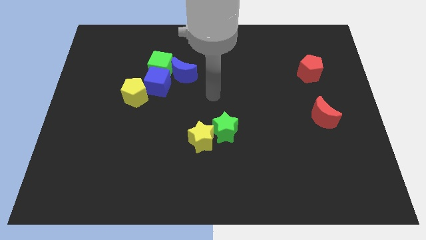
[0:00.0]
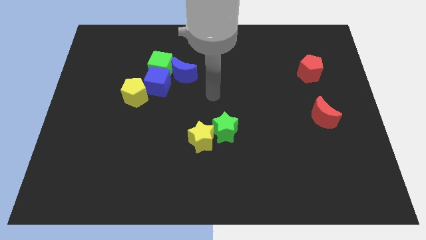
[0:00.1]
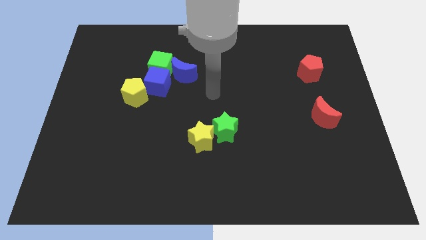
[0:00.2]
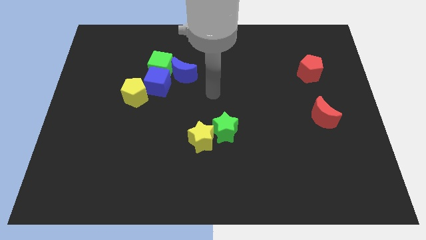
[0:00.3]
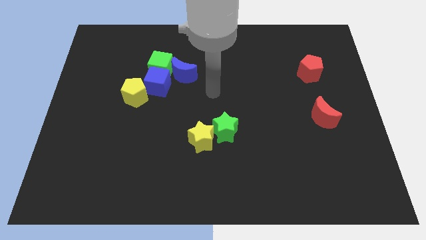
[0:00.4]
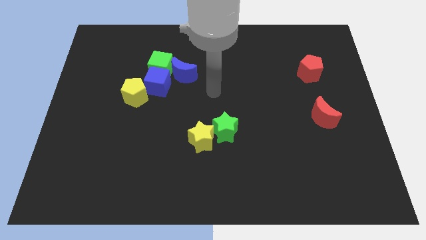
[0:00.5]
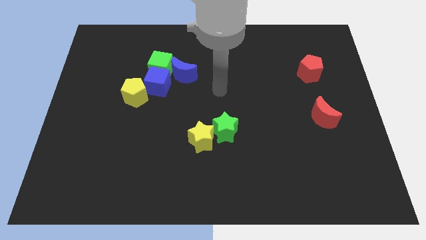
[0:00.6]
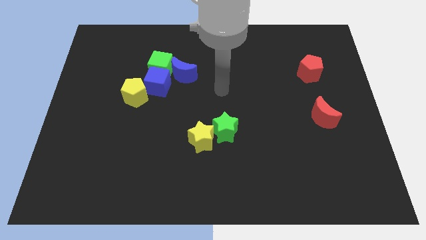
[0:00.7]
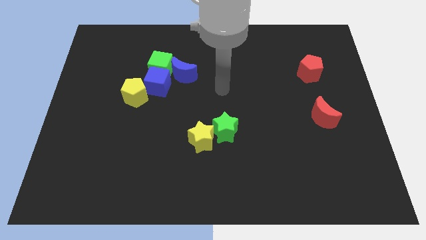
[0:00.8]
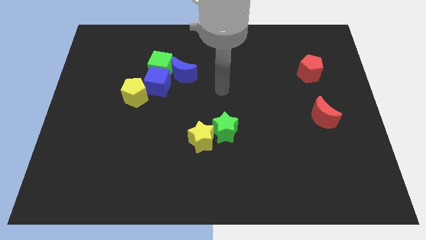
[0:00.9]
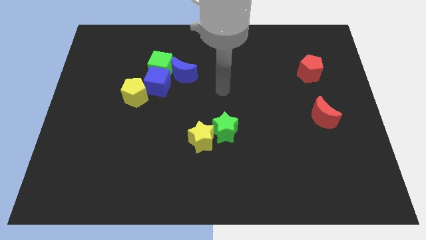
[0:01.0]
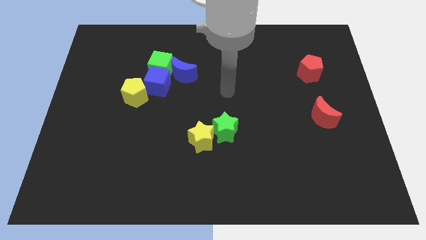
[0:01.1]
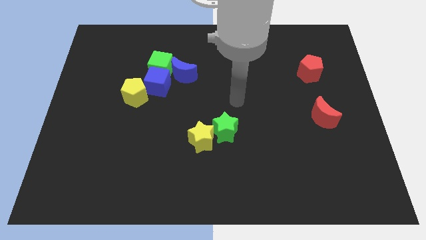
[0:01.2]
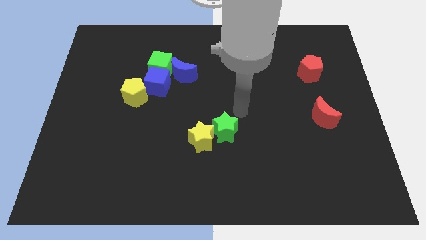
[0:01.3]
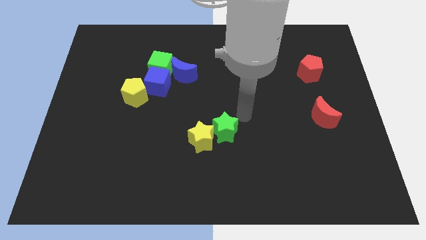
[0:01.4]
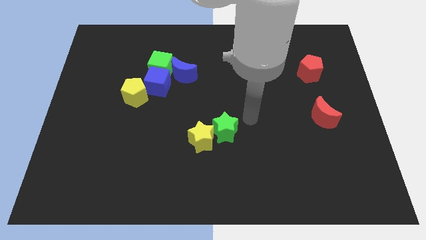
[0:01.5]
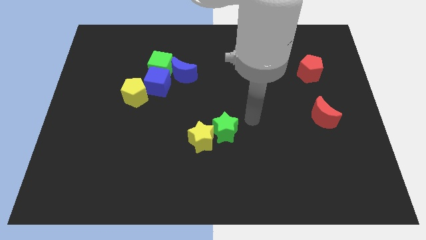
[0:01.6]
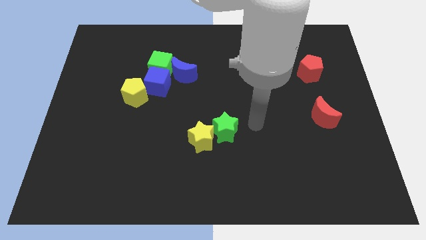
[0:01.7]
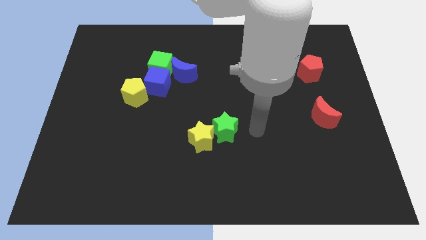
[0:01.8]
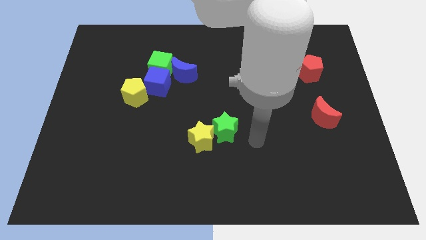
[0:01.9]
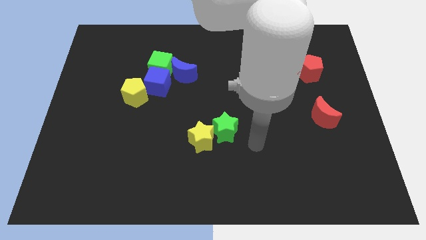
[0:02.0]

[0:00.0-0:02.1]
place your arm to the right of green star

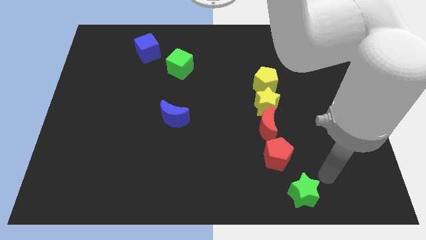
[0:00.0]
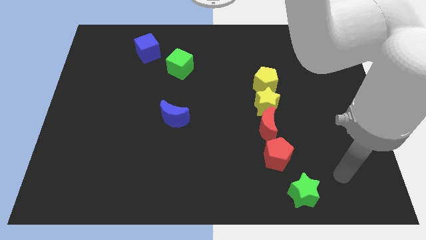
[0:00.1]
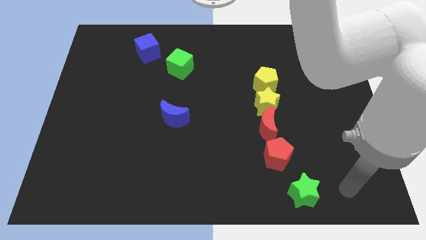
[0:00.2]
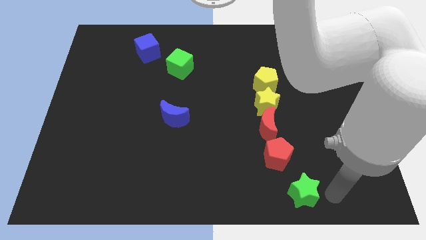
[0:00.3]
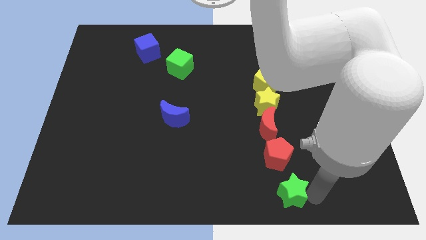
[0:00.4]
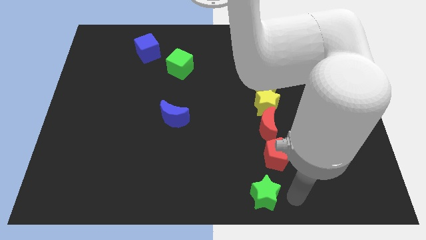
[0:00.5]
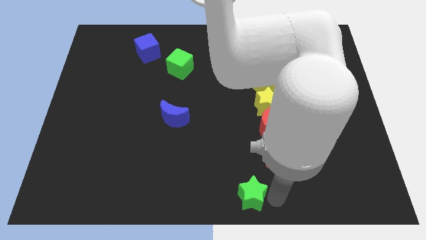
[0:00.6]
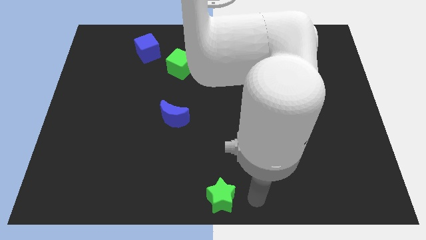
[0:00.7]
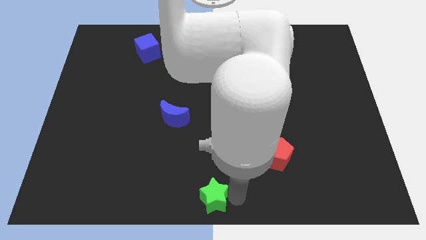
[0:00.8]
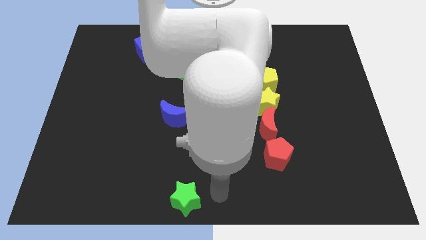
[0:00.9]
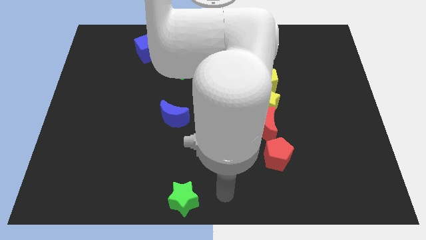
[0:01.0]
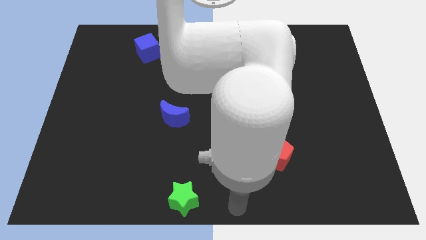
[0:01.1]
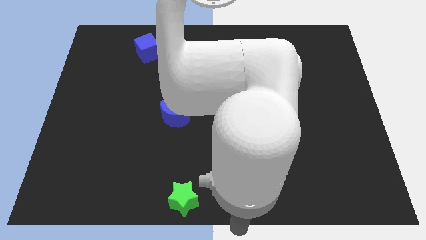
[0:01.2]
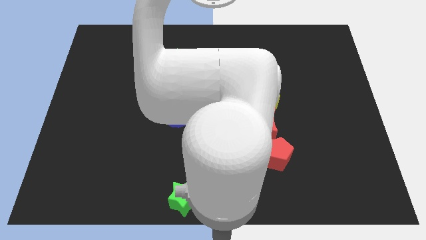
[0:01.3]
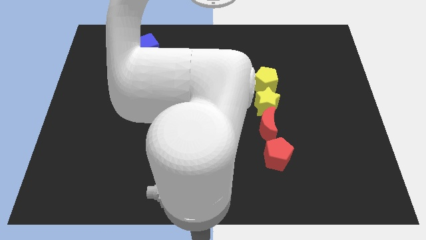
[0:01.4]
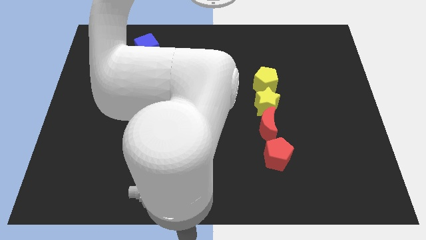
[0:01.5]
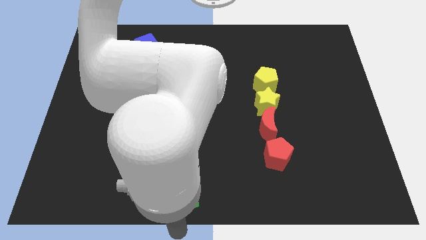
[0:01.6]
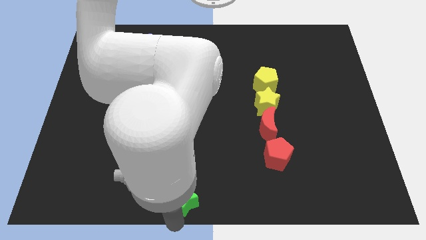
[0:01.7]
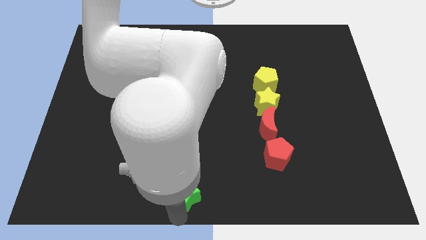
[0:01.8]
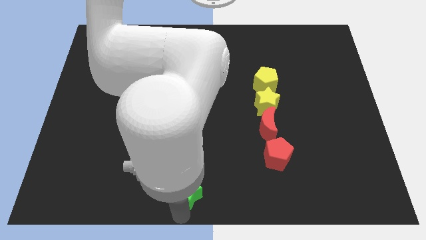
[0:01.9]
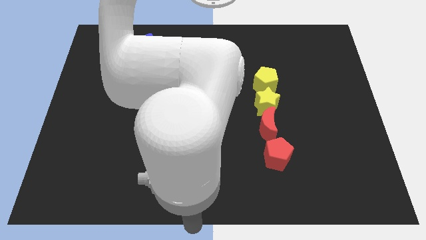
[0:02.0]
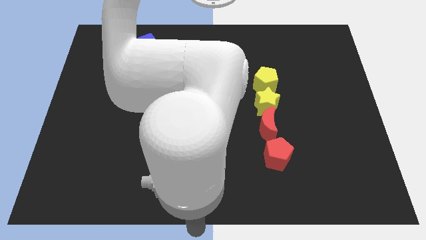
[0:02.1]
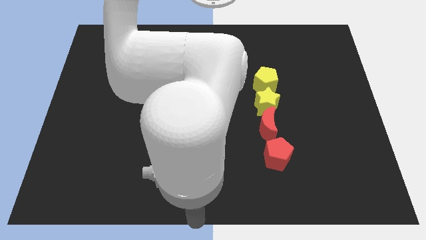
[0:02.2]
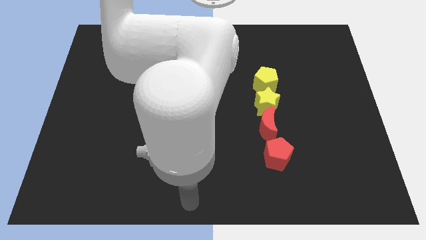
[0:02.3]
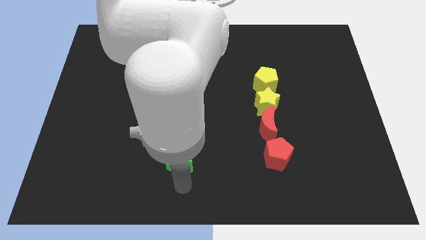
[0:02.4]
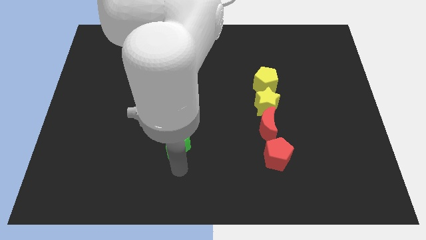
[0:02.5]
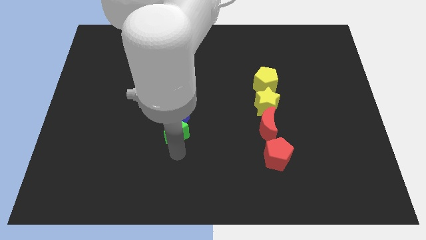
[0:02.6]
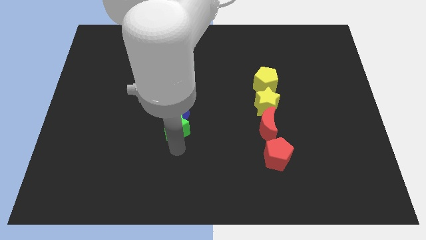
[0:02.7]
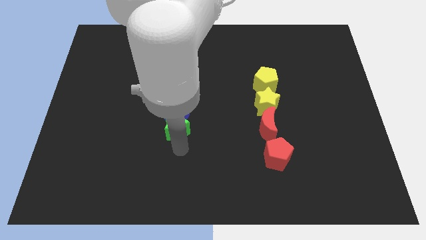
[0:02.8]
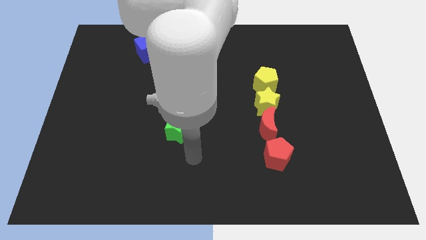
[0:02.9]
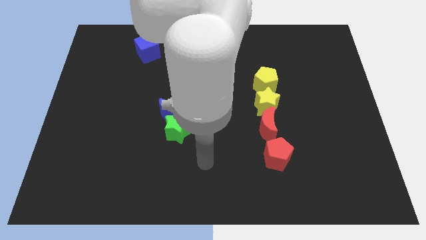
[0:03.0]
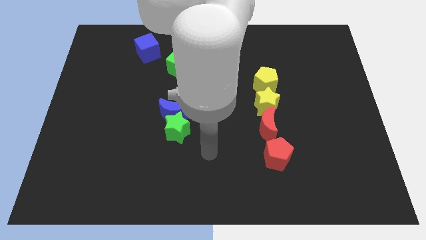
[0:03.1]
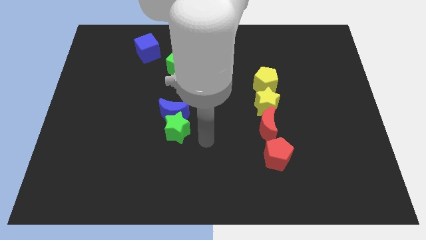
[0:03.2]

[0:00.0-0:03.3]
push the green star into the blue crescent

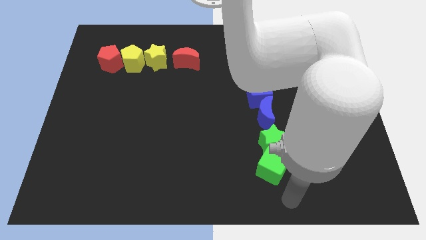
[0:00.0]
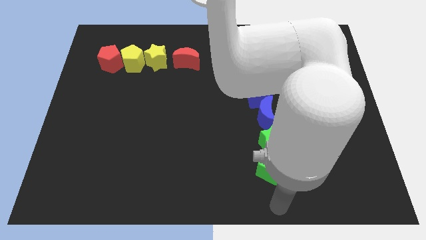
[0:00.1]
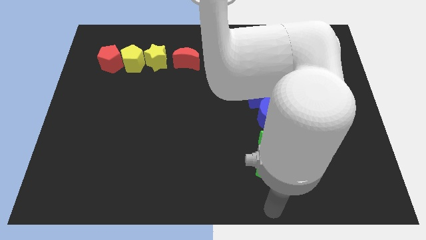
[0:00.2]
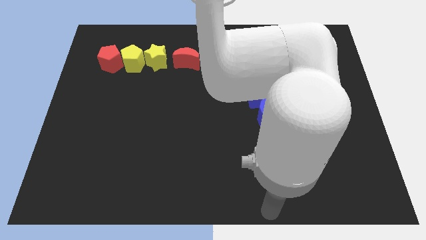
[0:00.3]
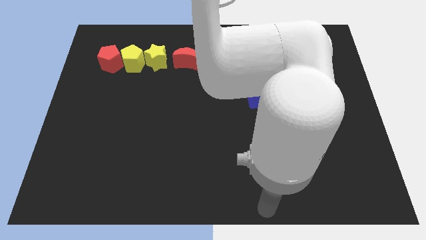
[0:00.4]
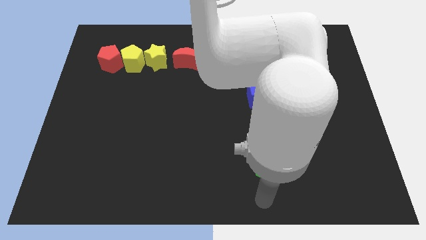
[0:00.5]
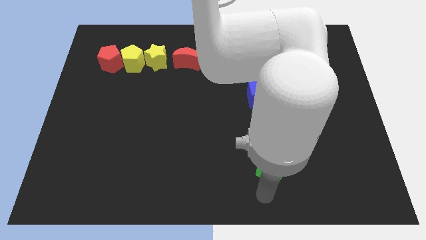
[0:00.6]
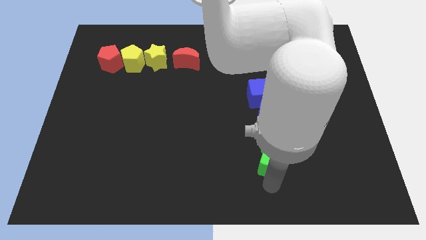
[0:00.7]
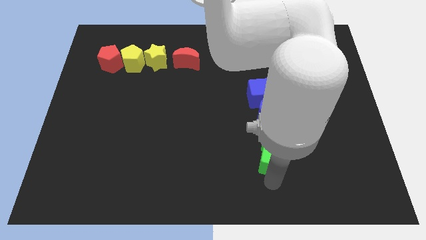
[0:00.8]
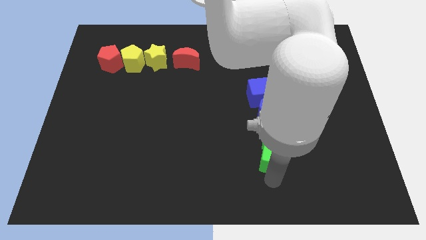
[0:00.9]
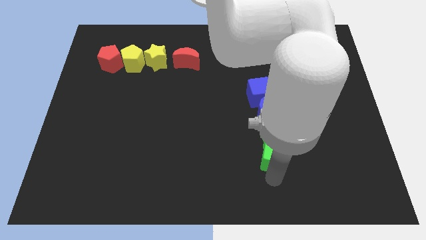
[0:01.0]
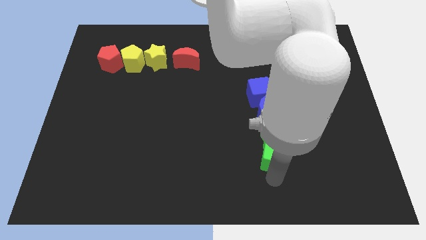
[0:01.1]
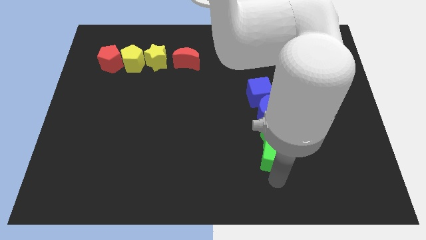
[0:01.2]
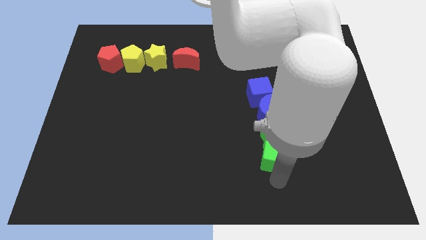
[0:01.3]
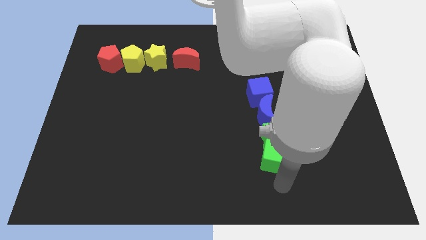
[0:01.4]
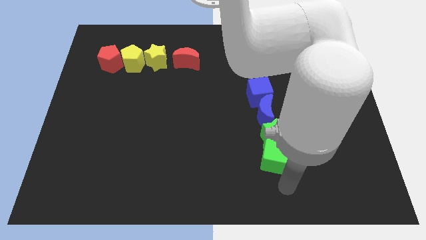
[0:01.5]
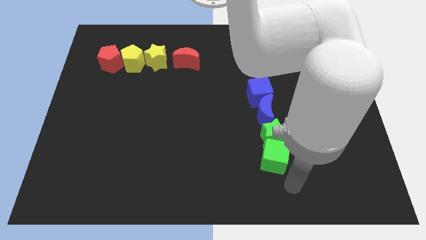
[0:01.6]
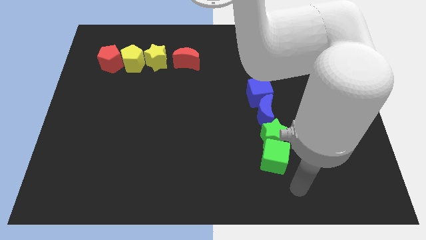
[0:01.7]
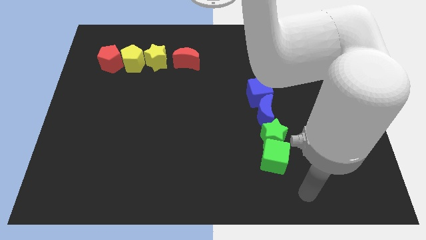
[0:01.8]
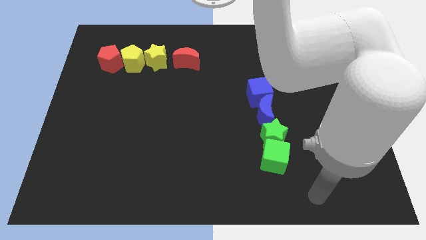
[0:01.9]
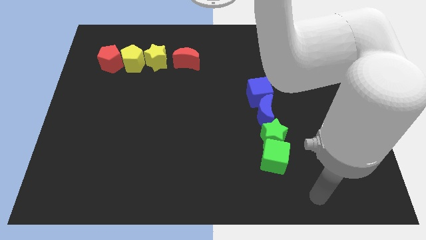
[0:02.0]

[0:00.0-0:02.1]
push the green blocks into the blue blocks

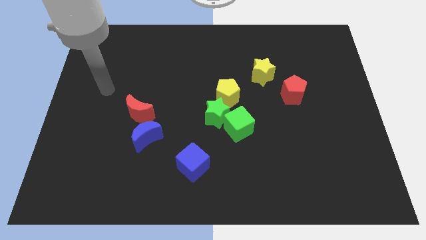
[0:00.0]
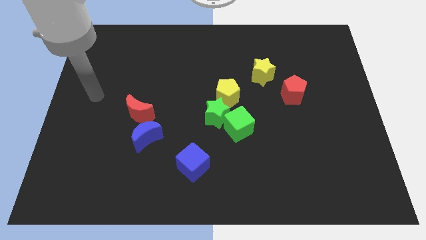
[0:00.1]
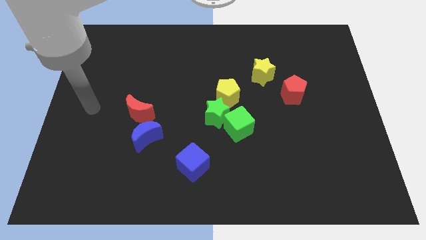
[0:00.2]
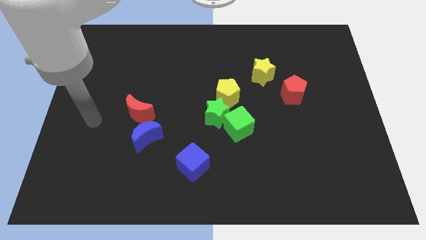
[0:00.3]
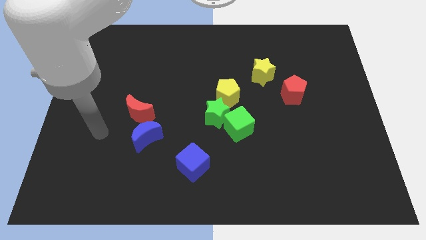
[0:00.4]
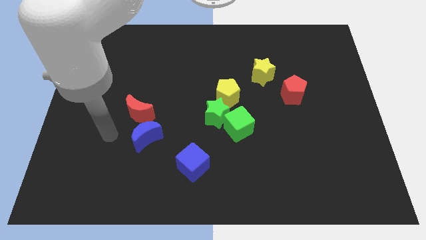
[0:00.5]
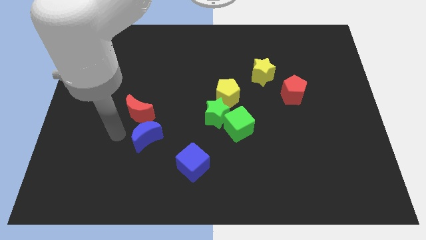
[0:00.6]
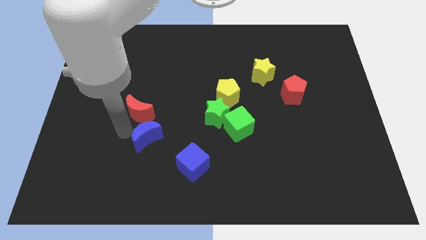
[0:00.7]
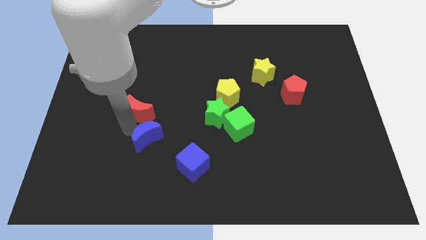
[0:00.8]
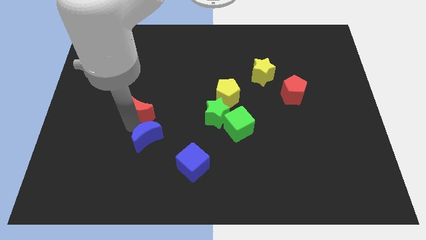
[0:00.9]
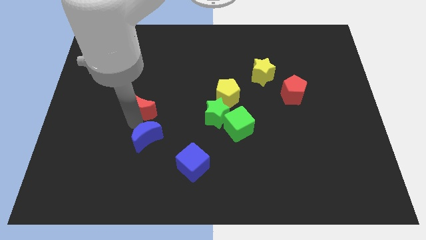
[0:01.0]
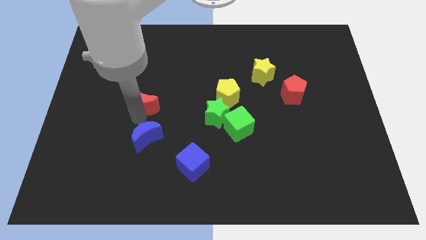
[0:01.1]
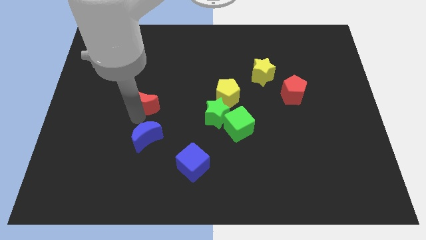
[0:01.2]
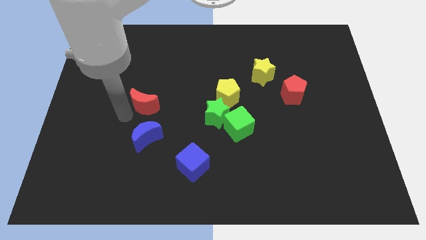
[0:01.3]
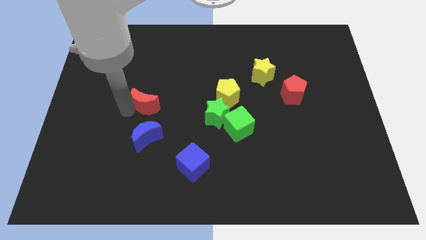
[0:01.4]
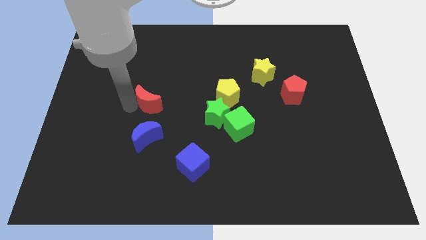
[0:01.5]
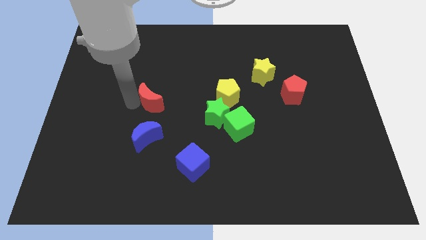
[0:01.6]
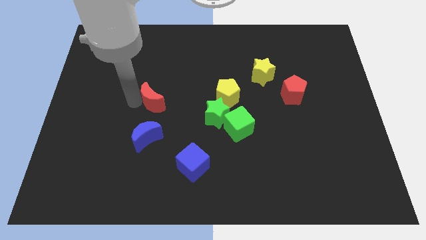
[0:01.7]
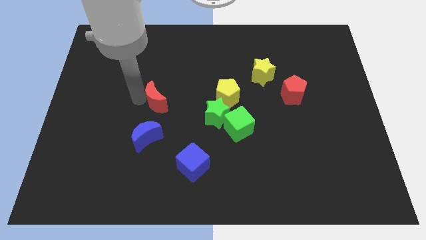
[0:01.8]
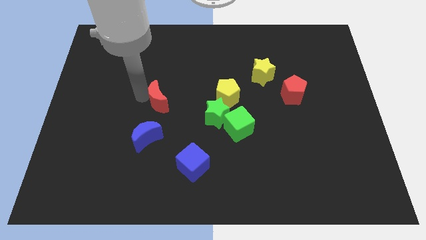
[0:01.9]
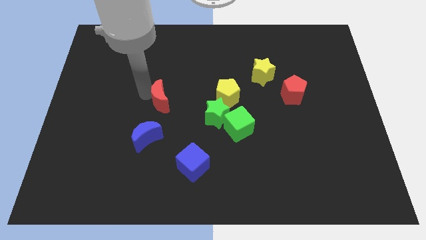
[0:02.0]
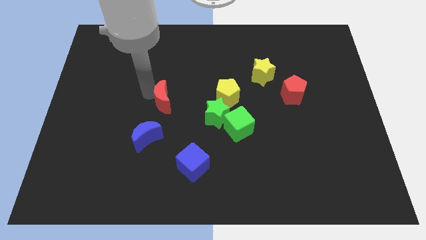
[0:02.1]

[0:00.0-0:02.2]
move the red crescent away from the blue crescent
